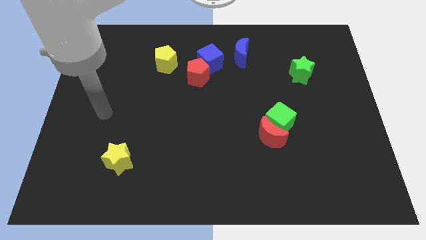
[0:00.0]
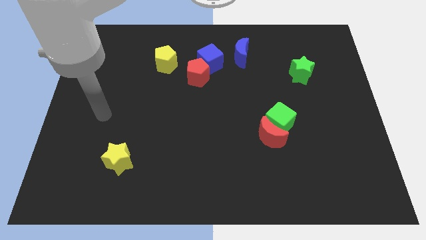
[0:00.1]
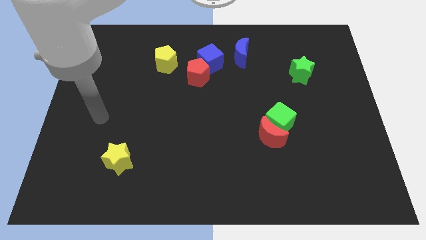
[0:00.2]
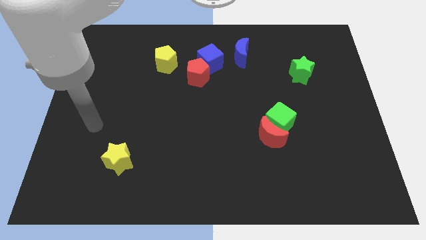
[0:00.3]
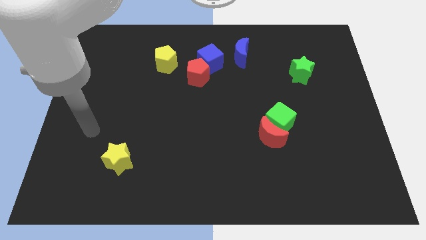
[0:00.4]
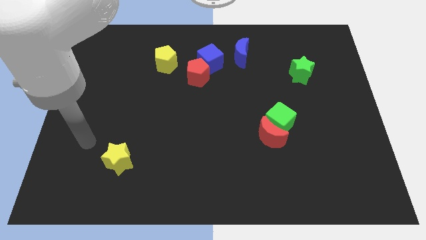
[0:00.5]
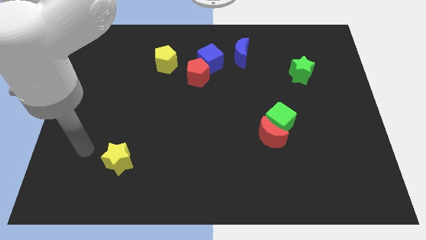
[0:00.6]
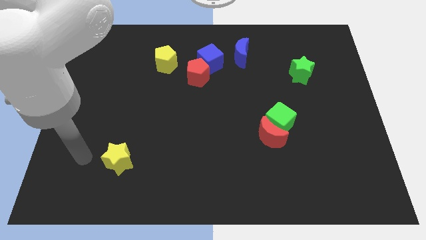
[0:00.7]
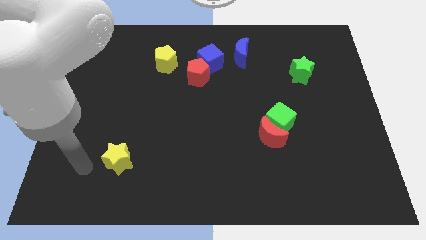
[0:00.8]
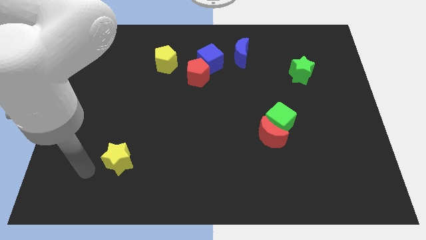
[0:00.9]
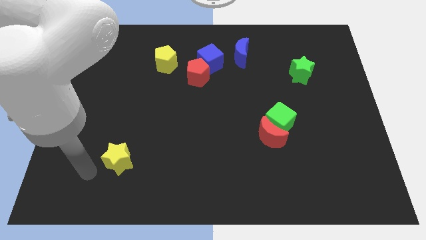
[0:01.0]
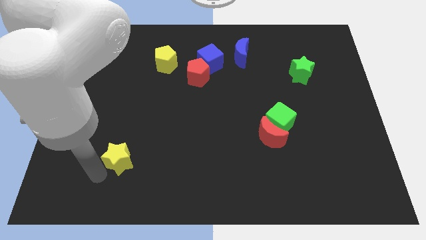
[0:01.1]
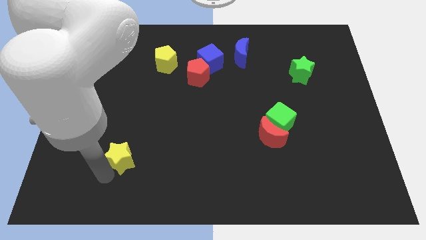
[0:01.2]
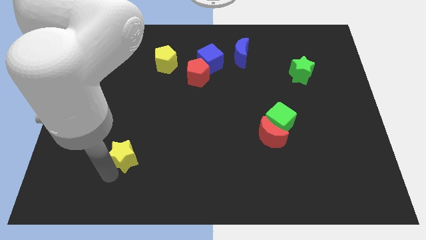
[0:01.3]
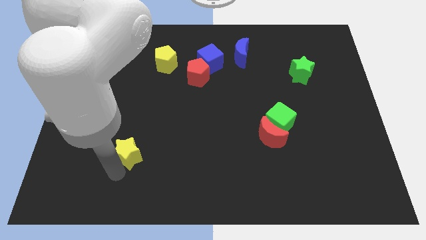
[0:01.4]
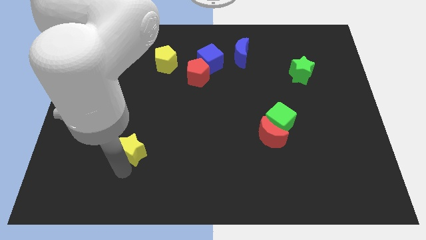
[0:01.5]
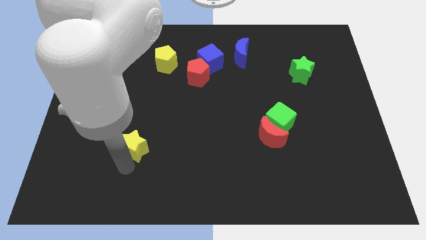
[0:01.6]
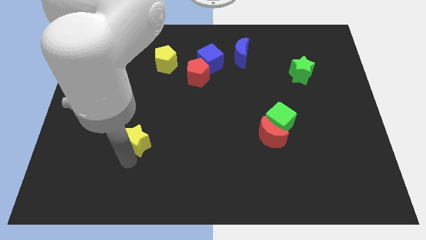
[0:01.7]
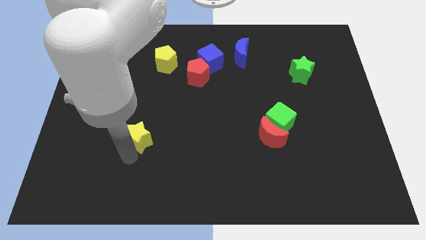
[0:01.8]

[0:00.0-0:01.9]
push the yellow star to the left of the red crescent

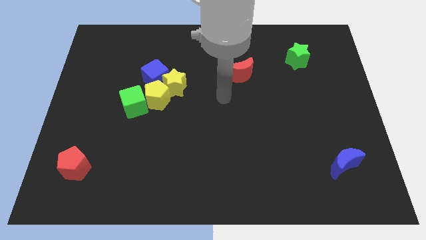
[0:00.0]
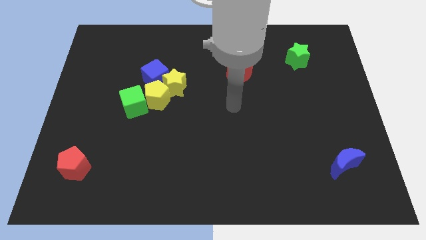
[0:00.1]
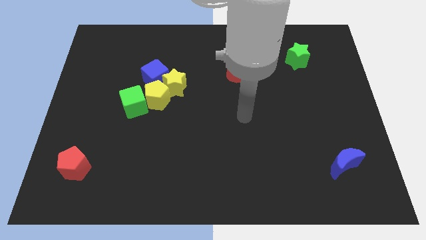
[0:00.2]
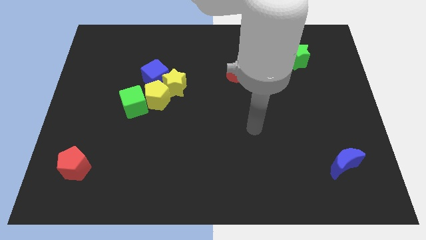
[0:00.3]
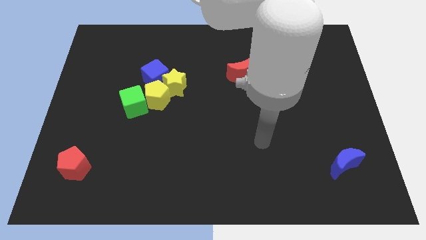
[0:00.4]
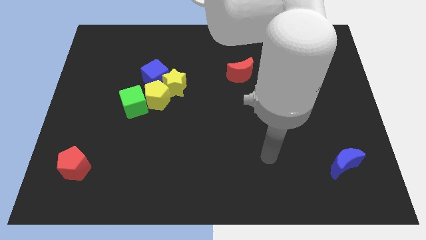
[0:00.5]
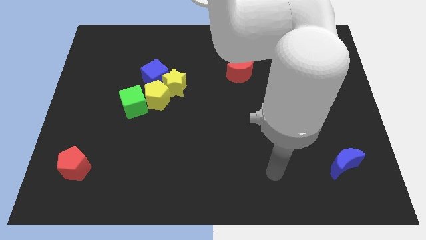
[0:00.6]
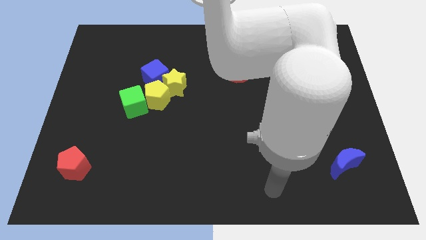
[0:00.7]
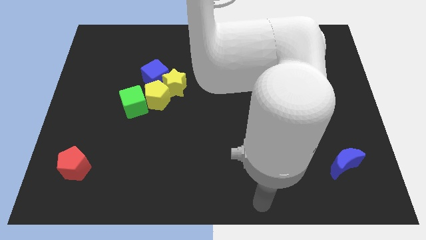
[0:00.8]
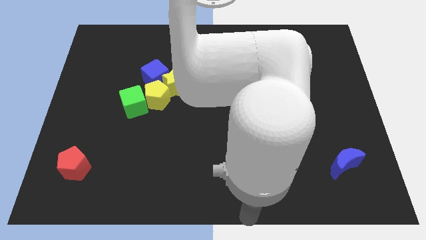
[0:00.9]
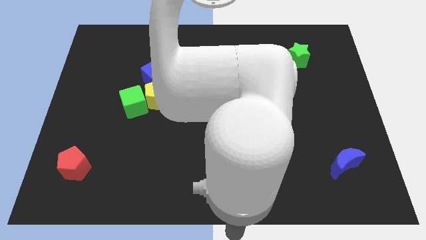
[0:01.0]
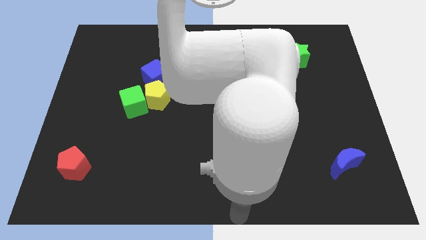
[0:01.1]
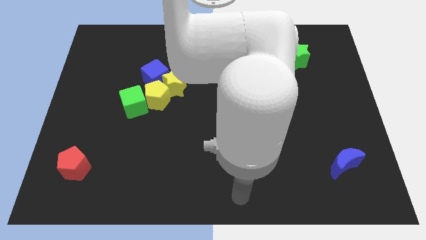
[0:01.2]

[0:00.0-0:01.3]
place your arm at the bottom center of the board

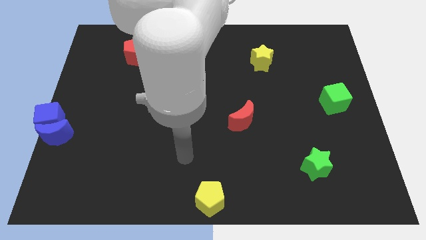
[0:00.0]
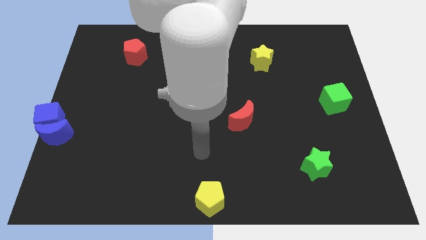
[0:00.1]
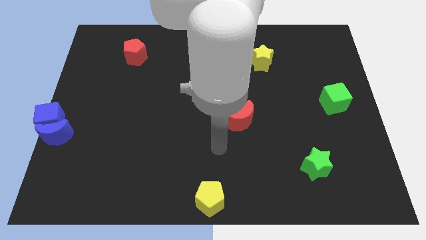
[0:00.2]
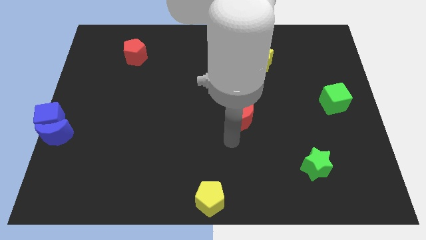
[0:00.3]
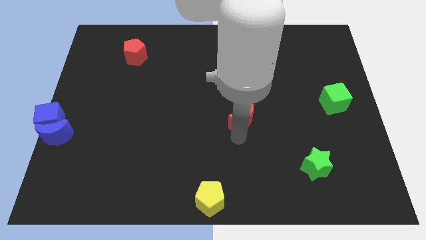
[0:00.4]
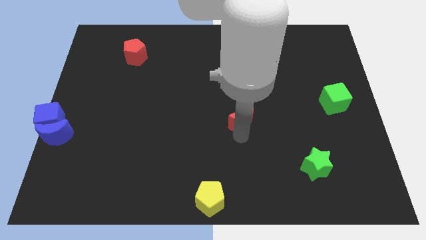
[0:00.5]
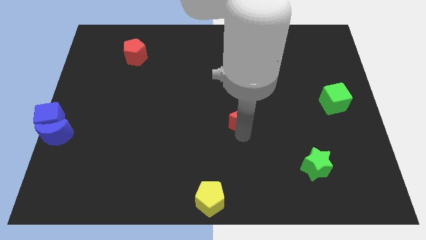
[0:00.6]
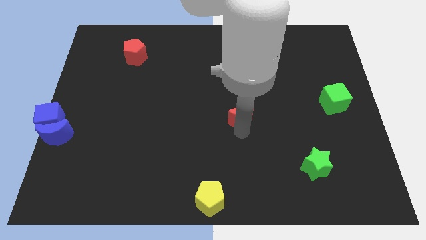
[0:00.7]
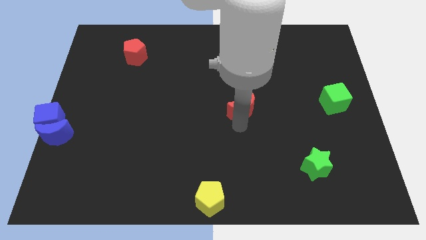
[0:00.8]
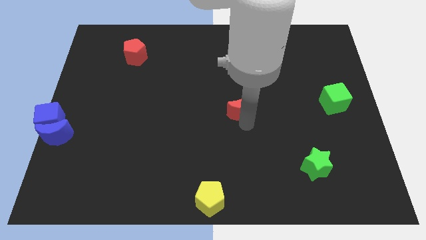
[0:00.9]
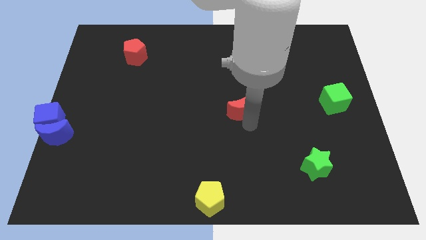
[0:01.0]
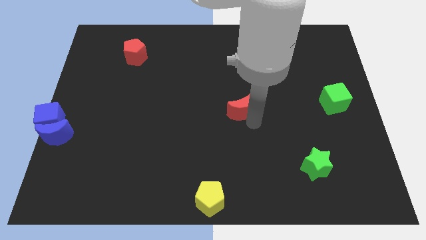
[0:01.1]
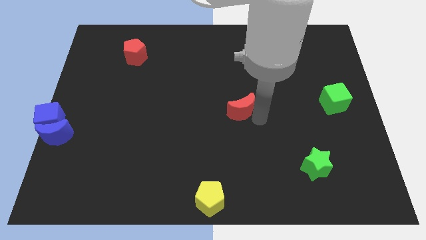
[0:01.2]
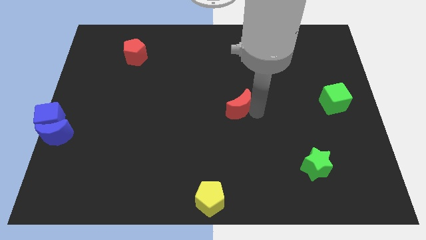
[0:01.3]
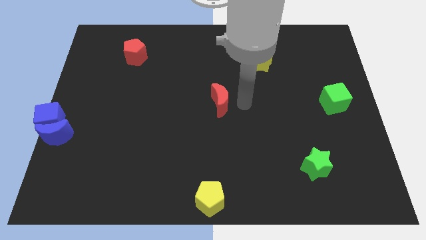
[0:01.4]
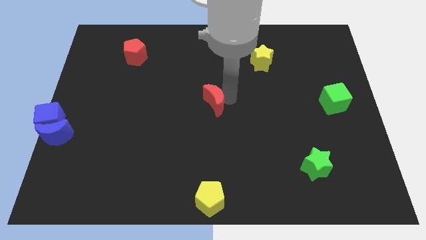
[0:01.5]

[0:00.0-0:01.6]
move the red moon above the yellow pentagon

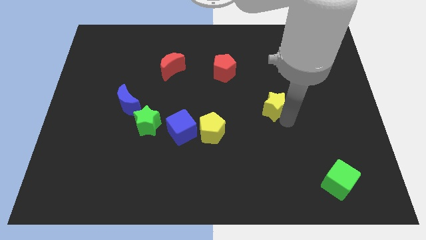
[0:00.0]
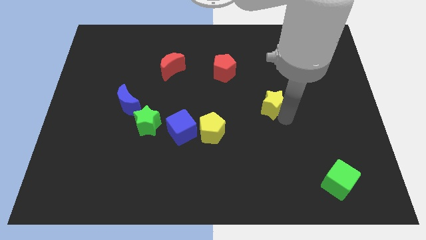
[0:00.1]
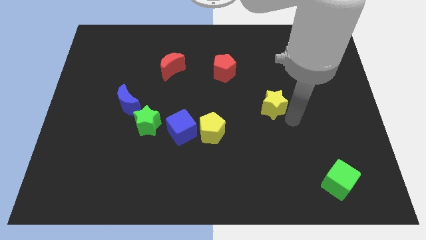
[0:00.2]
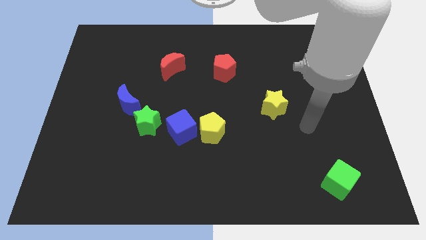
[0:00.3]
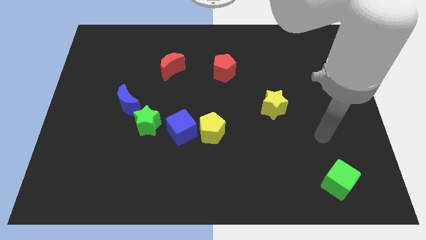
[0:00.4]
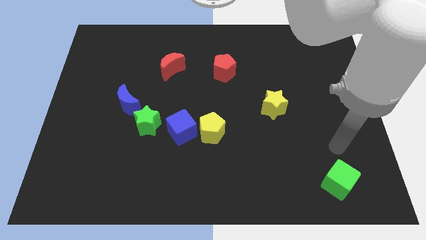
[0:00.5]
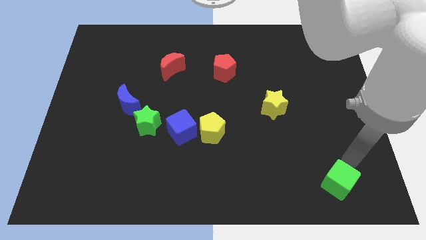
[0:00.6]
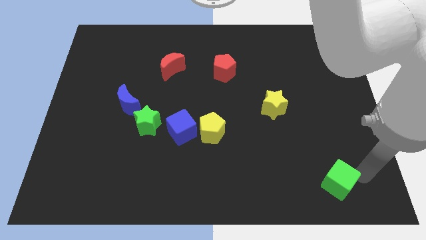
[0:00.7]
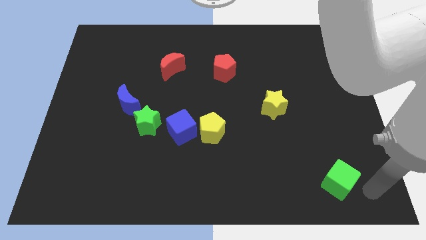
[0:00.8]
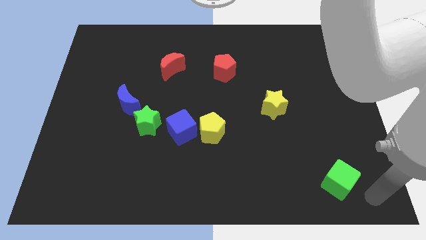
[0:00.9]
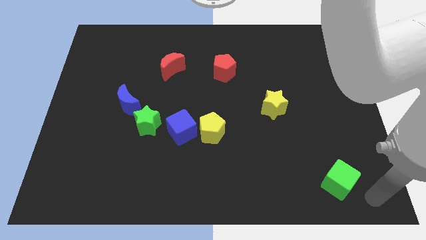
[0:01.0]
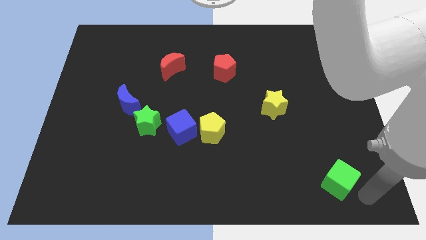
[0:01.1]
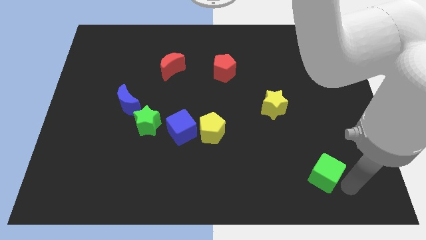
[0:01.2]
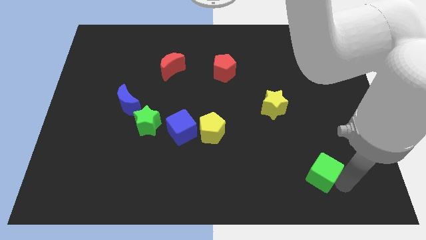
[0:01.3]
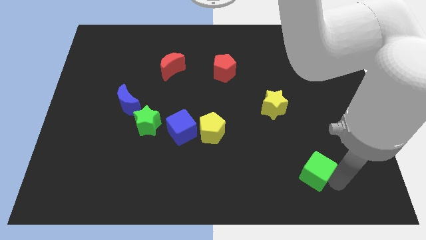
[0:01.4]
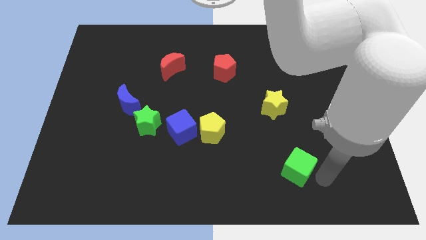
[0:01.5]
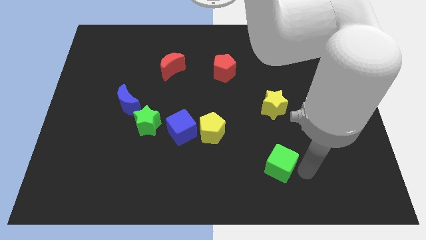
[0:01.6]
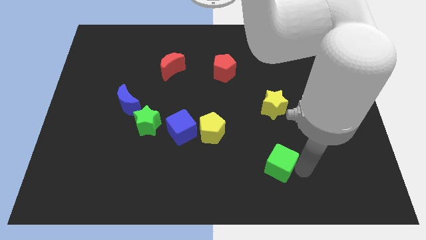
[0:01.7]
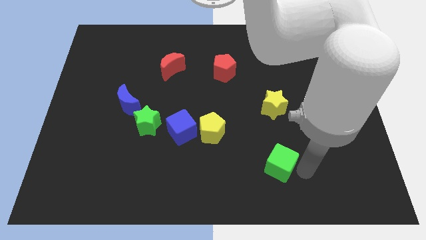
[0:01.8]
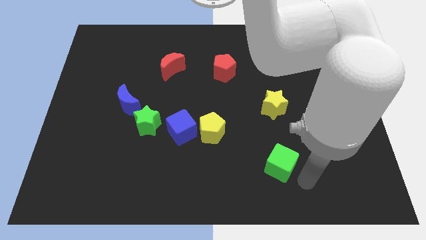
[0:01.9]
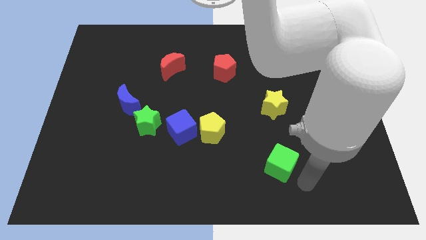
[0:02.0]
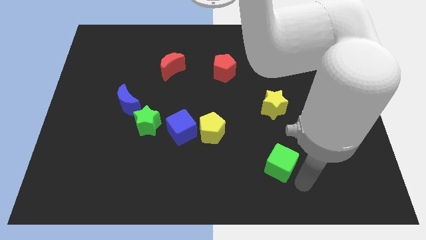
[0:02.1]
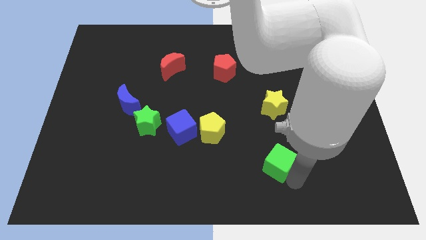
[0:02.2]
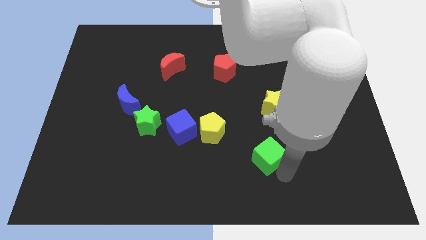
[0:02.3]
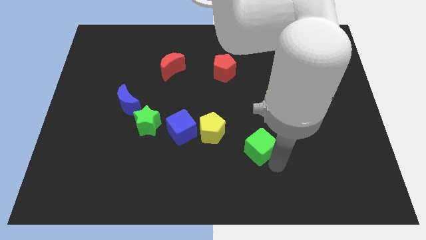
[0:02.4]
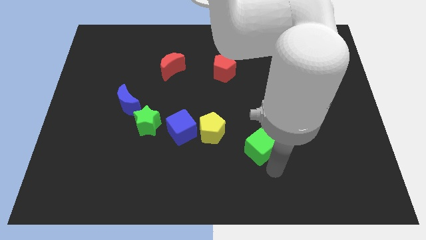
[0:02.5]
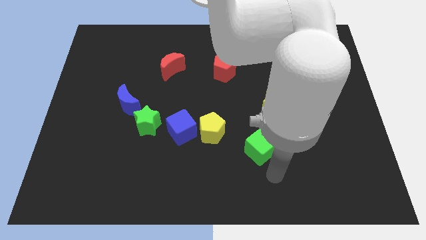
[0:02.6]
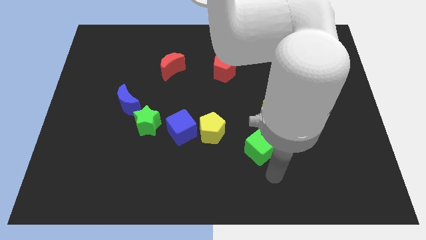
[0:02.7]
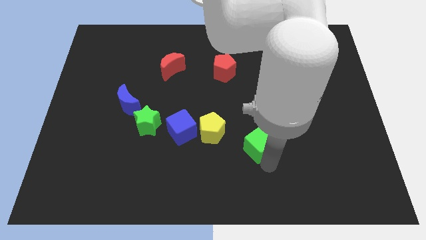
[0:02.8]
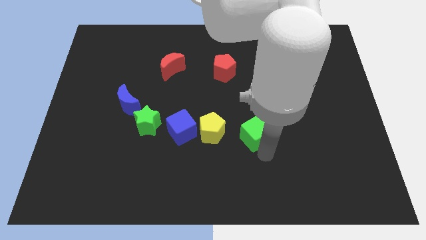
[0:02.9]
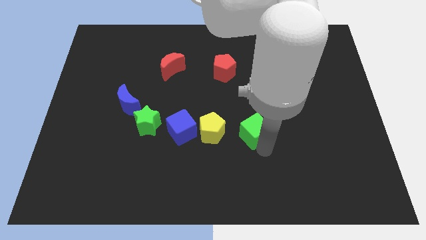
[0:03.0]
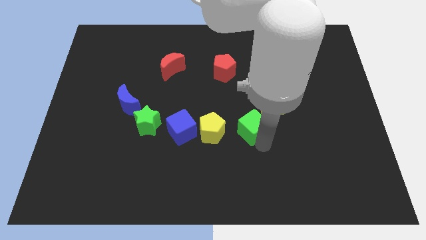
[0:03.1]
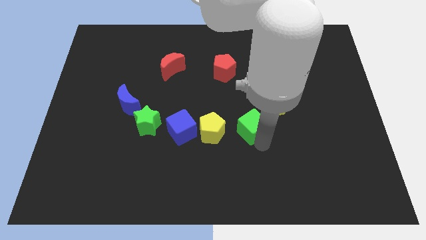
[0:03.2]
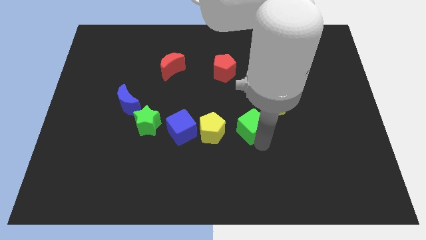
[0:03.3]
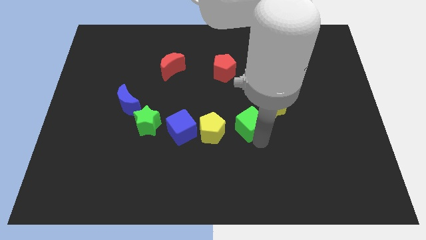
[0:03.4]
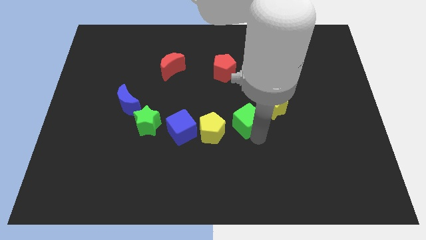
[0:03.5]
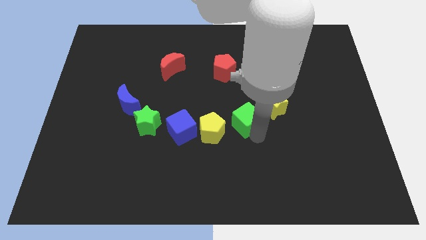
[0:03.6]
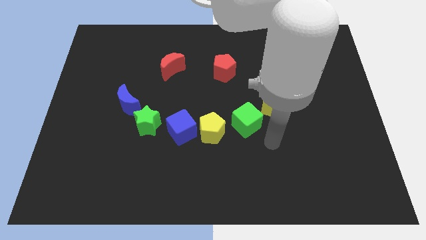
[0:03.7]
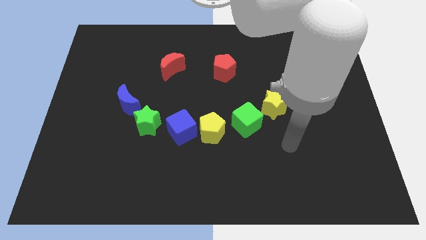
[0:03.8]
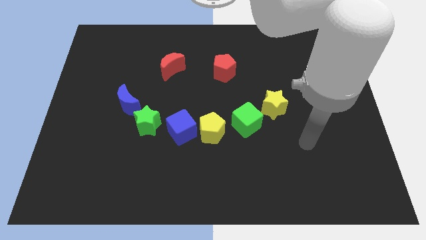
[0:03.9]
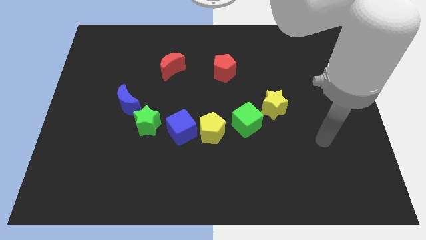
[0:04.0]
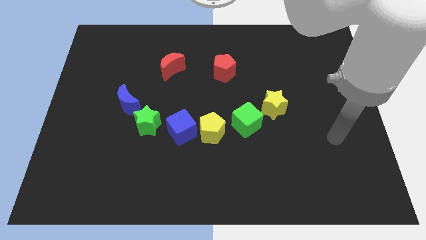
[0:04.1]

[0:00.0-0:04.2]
move the green cube in between the yellow star and yellow pentagon
